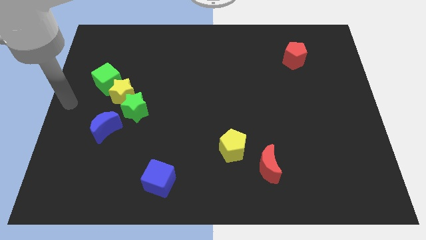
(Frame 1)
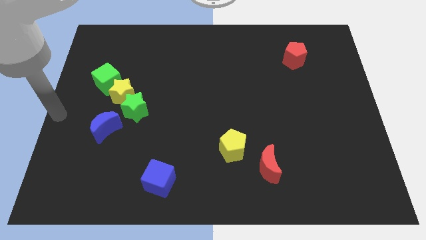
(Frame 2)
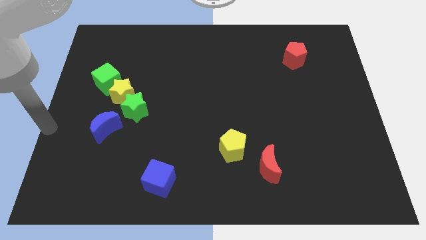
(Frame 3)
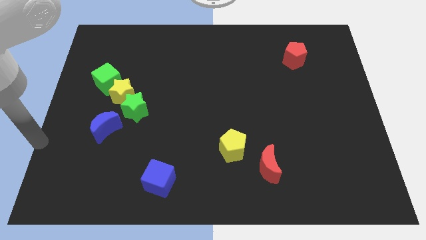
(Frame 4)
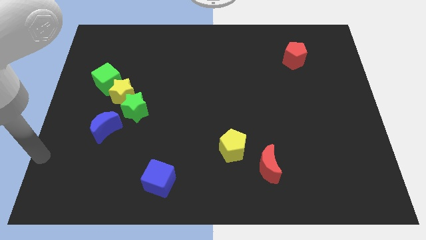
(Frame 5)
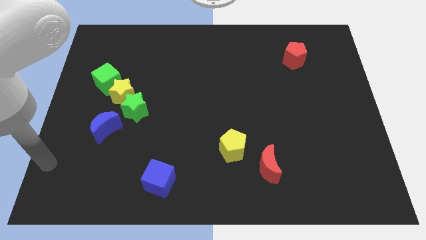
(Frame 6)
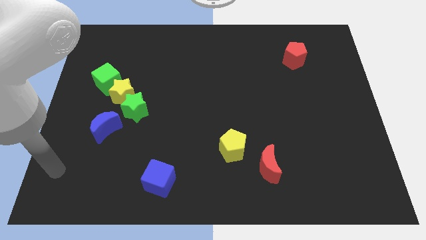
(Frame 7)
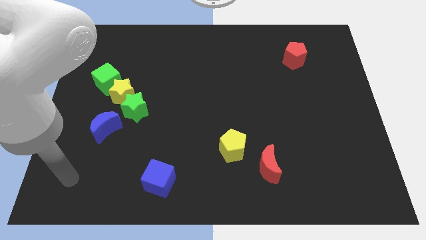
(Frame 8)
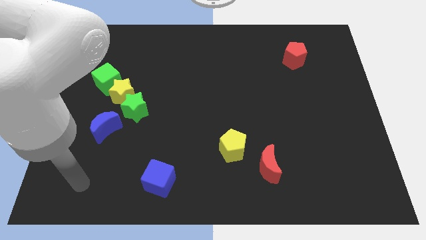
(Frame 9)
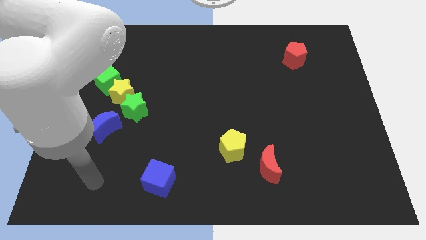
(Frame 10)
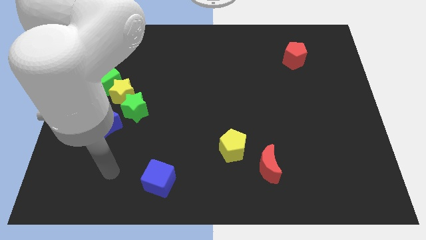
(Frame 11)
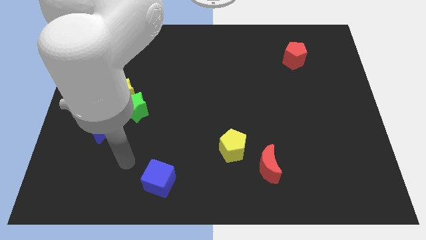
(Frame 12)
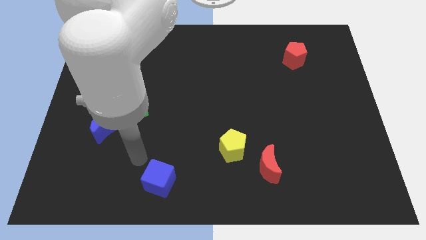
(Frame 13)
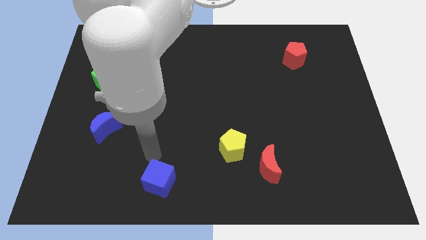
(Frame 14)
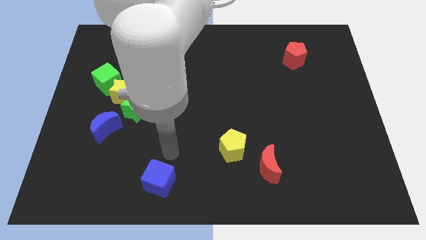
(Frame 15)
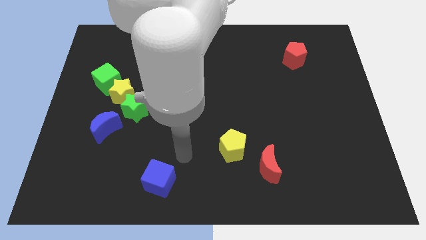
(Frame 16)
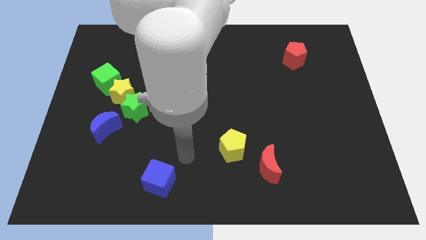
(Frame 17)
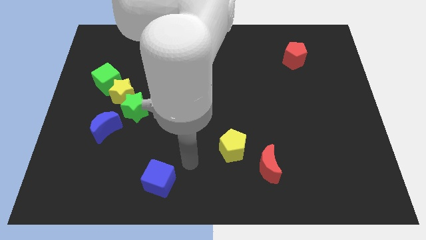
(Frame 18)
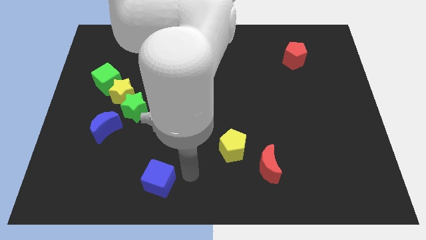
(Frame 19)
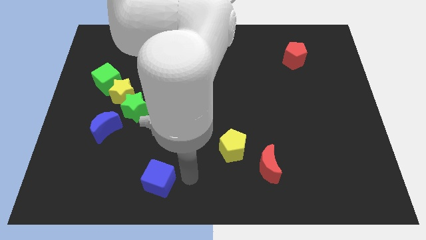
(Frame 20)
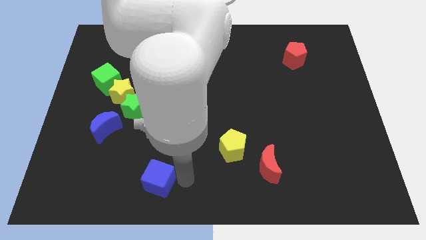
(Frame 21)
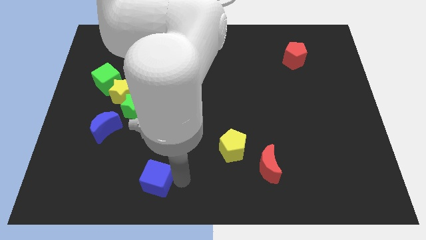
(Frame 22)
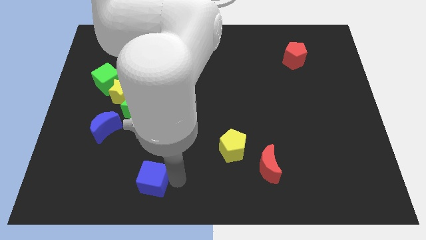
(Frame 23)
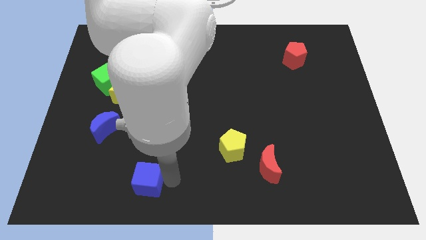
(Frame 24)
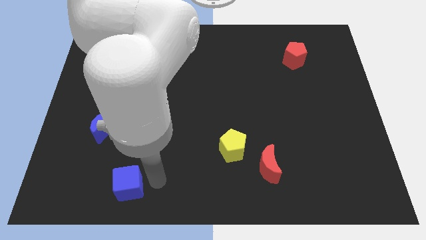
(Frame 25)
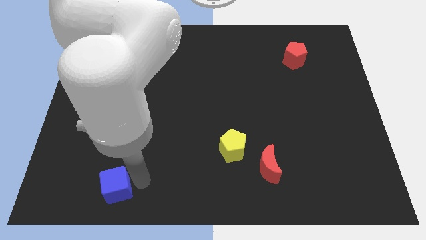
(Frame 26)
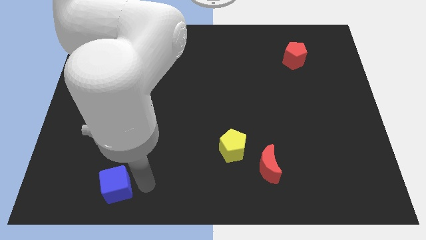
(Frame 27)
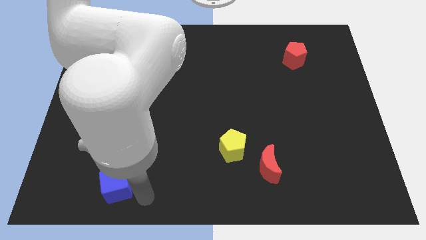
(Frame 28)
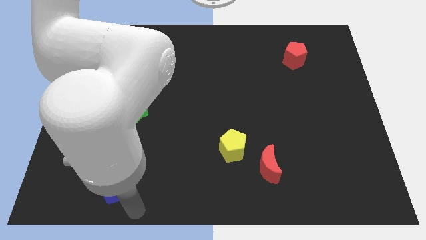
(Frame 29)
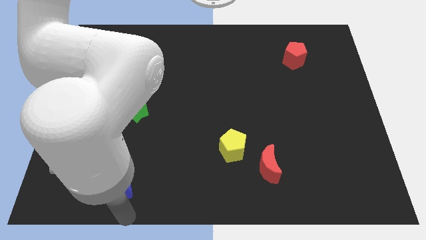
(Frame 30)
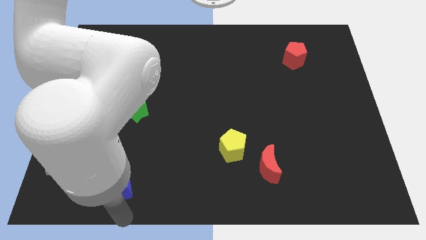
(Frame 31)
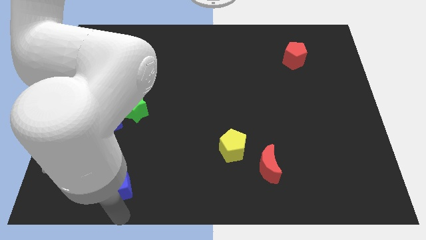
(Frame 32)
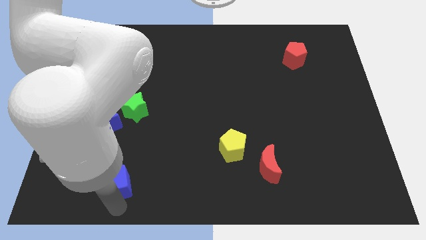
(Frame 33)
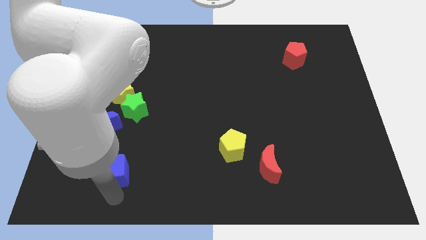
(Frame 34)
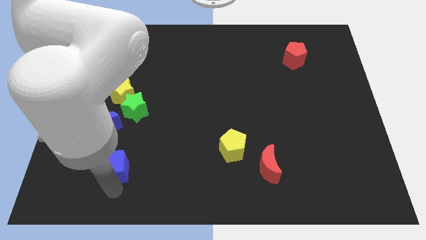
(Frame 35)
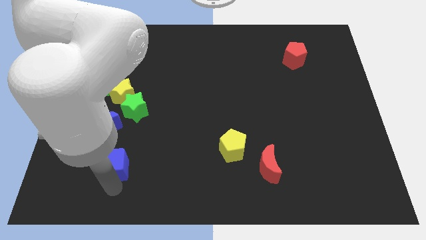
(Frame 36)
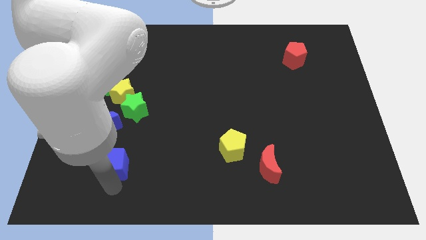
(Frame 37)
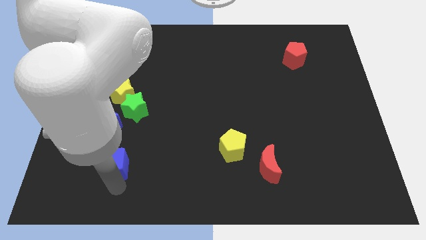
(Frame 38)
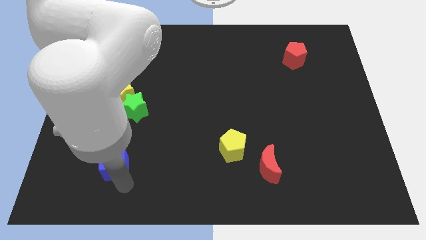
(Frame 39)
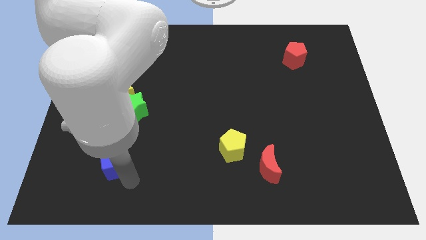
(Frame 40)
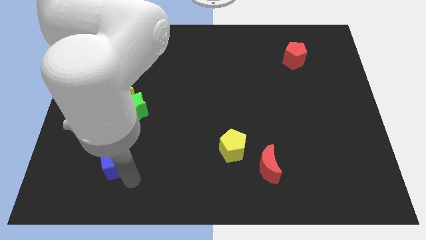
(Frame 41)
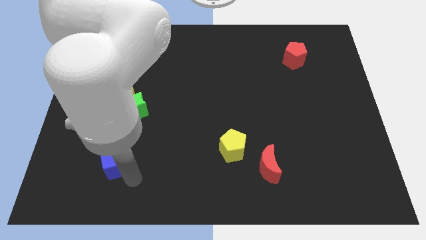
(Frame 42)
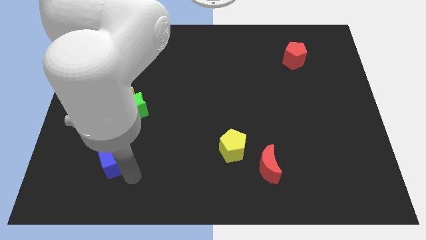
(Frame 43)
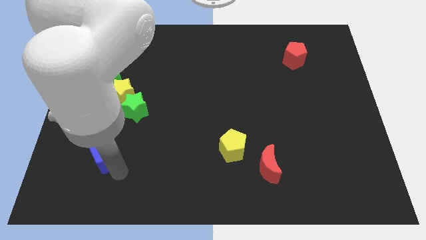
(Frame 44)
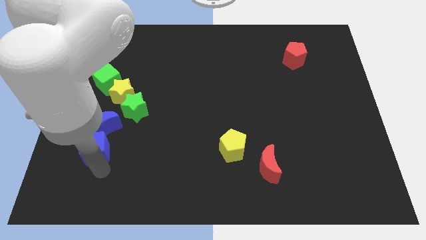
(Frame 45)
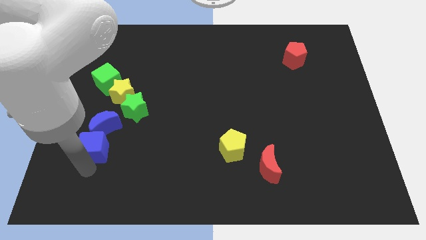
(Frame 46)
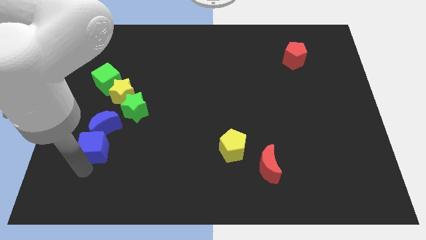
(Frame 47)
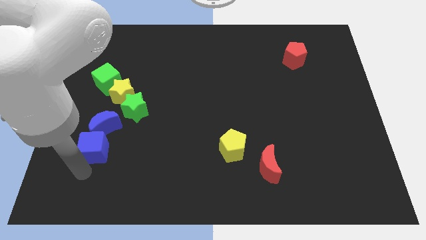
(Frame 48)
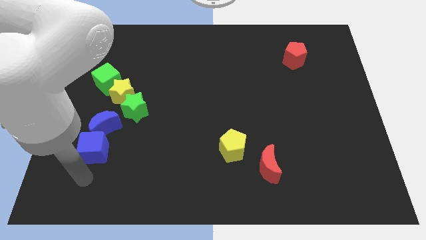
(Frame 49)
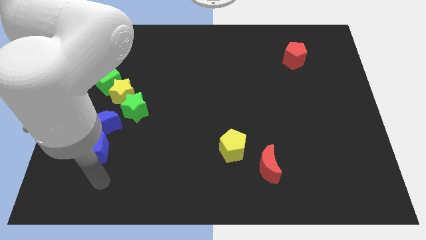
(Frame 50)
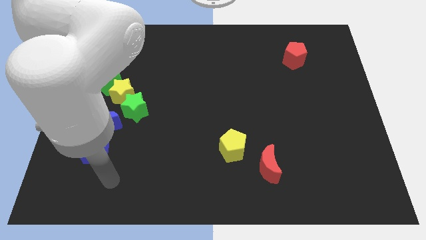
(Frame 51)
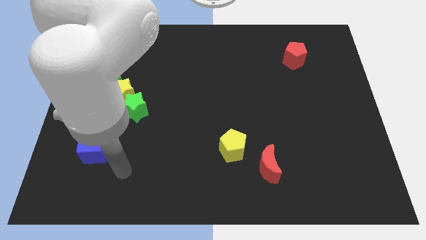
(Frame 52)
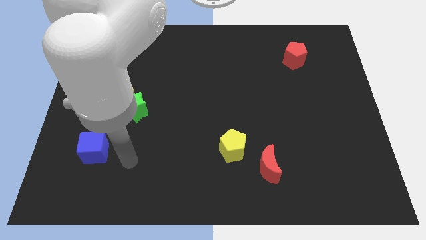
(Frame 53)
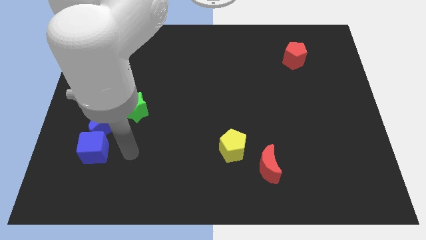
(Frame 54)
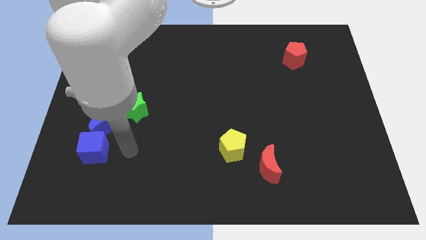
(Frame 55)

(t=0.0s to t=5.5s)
place the blue cube below the blue crescent

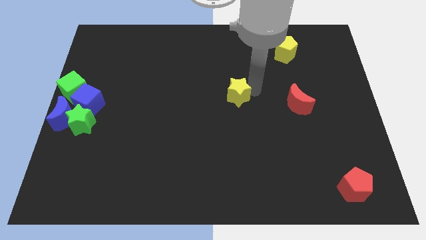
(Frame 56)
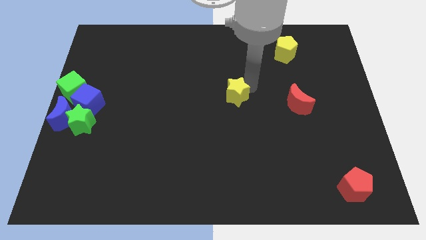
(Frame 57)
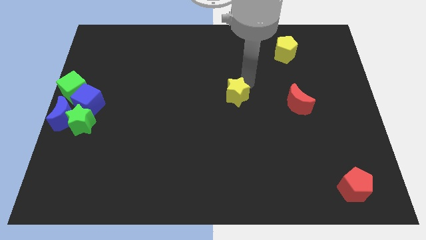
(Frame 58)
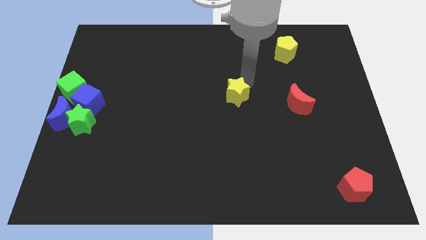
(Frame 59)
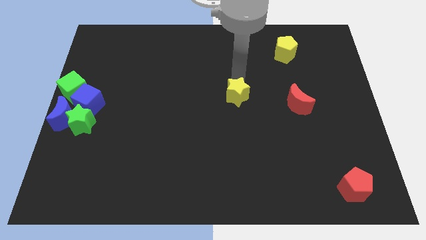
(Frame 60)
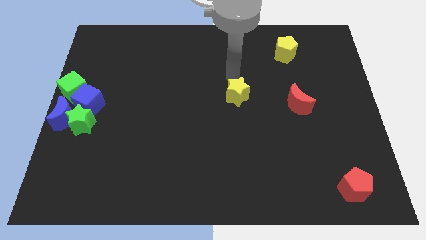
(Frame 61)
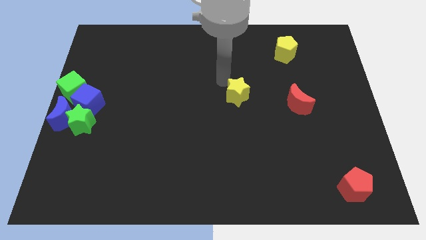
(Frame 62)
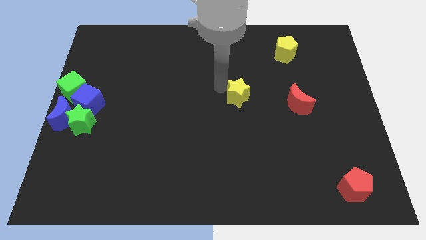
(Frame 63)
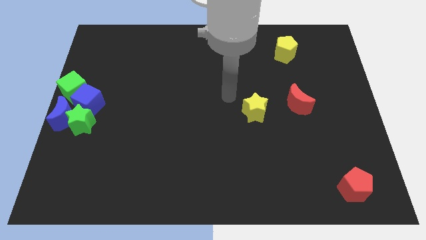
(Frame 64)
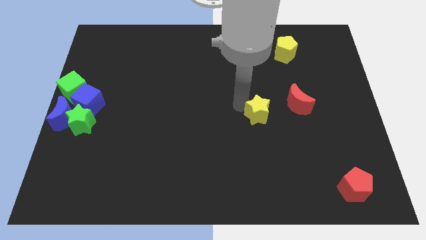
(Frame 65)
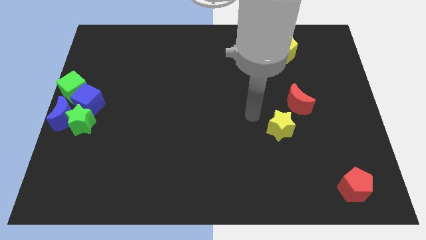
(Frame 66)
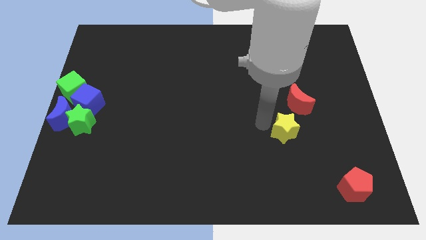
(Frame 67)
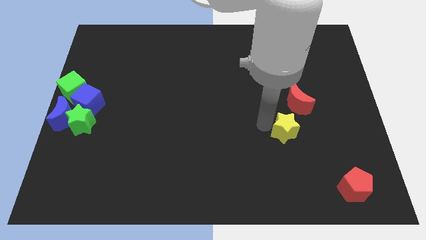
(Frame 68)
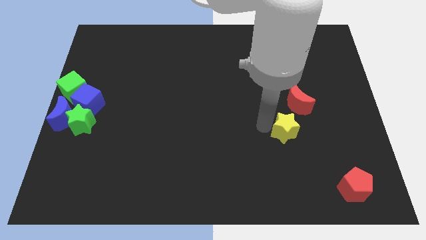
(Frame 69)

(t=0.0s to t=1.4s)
drag the yellow star diagonally bottom left to the red moon

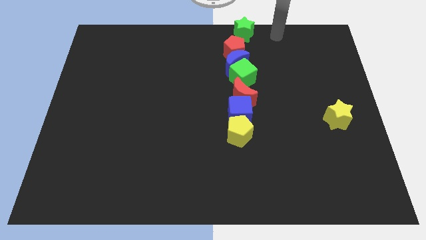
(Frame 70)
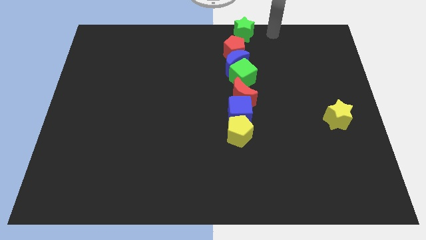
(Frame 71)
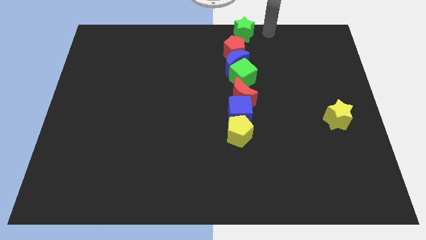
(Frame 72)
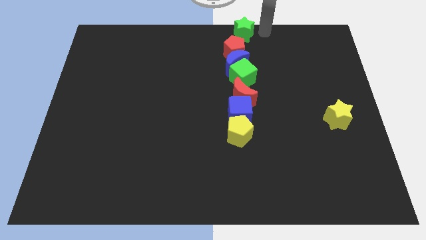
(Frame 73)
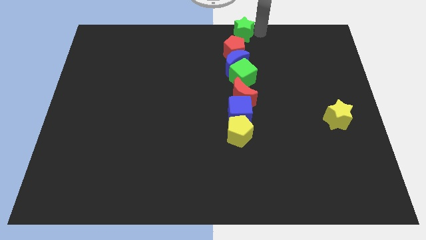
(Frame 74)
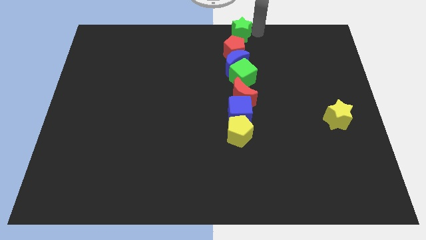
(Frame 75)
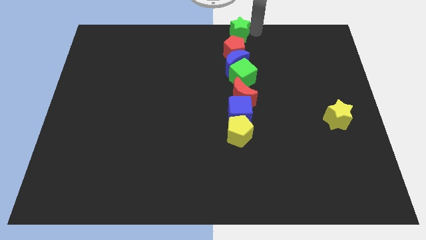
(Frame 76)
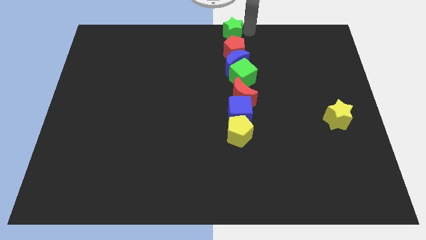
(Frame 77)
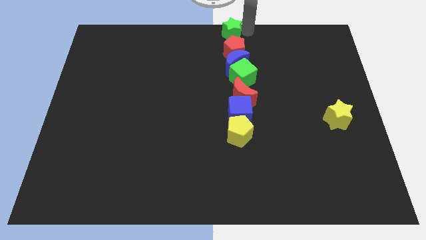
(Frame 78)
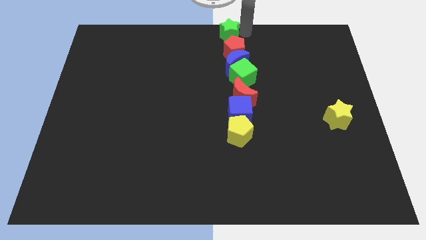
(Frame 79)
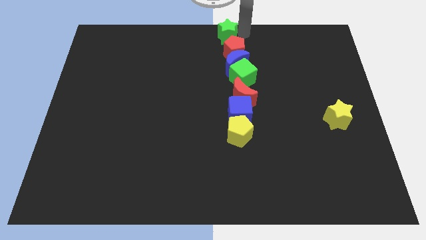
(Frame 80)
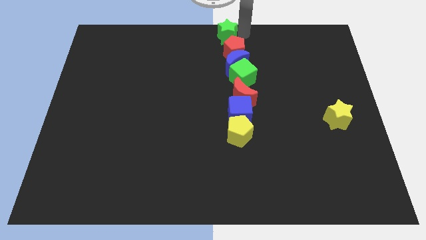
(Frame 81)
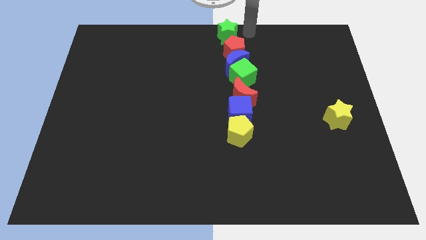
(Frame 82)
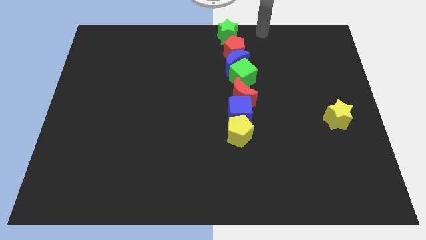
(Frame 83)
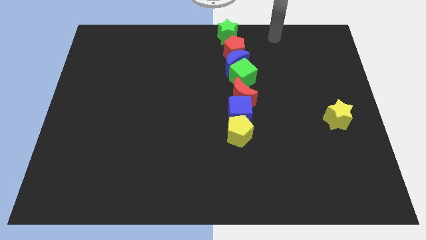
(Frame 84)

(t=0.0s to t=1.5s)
move the green star towards the top centre of the board

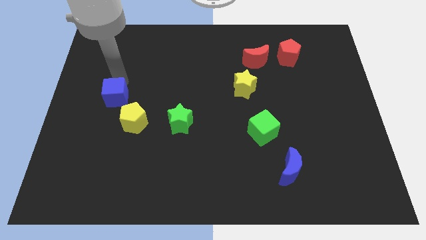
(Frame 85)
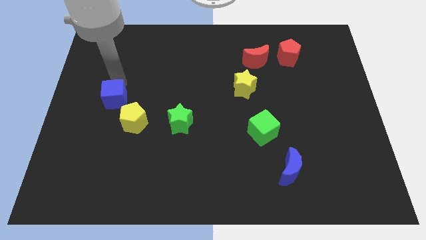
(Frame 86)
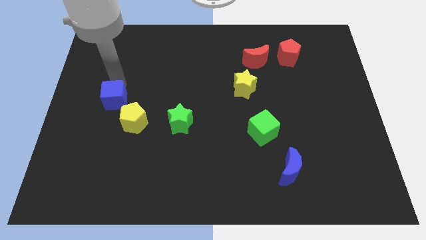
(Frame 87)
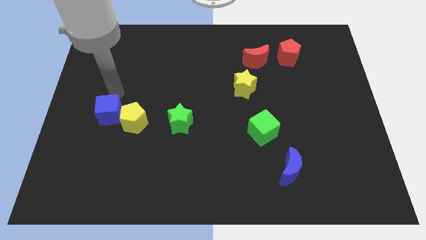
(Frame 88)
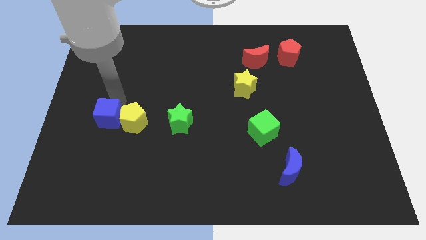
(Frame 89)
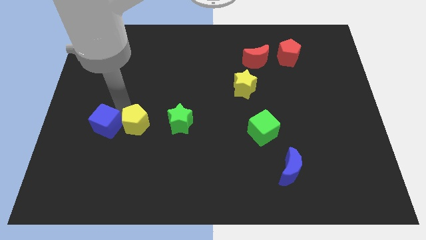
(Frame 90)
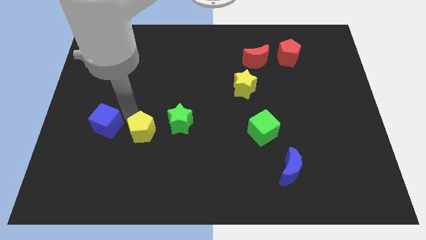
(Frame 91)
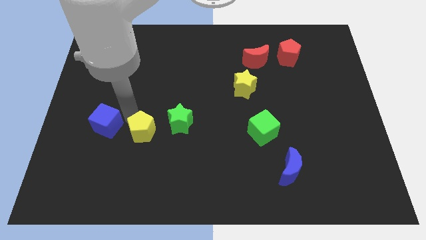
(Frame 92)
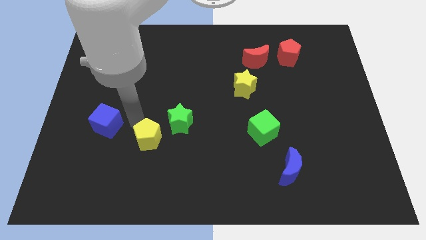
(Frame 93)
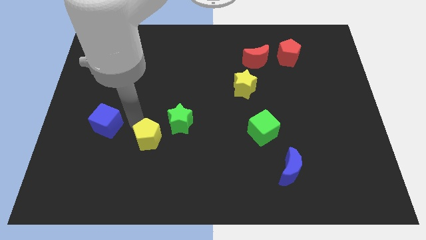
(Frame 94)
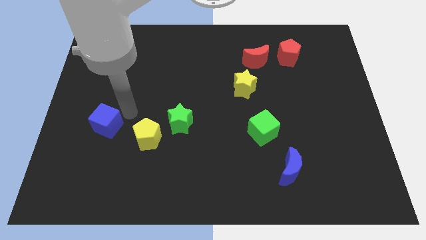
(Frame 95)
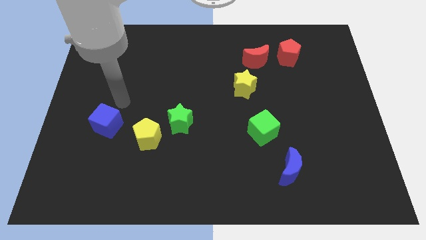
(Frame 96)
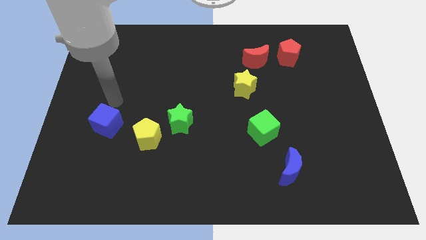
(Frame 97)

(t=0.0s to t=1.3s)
move yellow pentagon downwards
